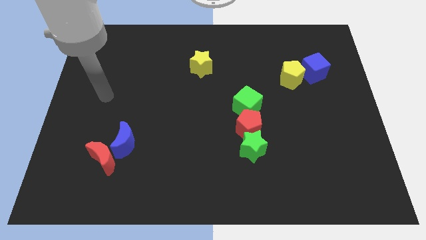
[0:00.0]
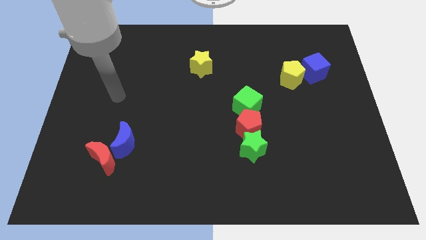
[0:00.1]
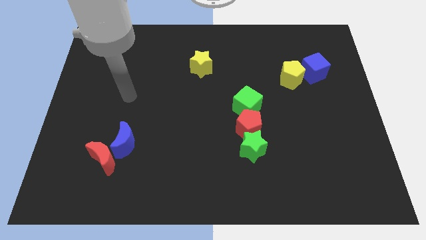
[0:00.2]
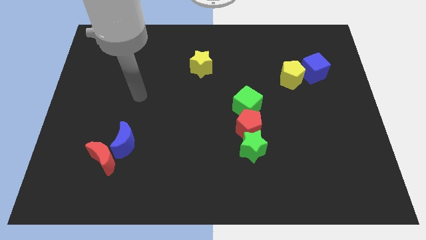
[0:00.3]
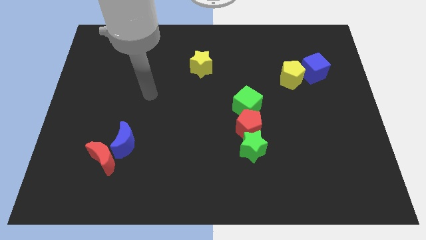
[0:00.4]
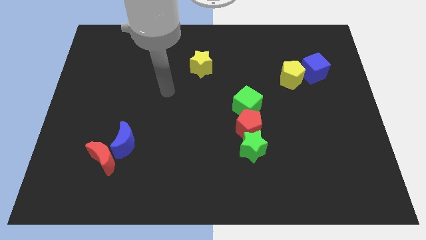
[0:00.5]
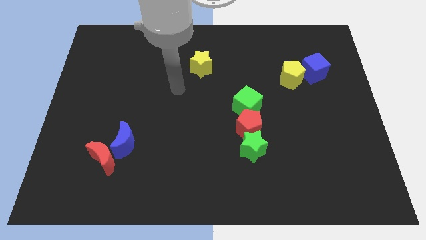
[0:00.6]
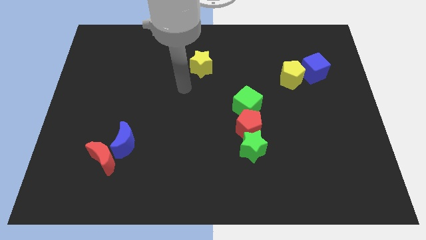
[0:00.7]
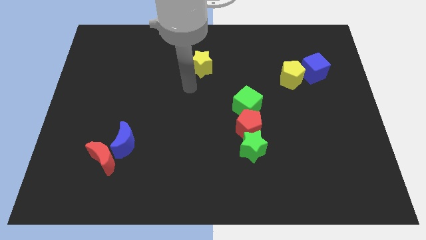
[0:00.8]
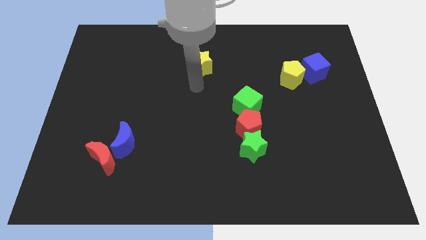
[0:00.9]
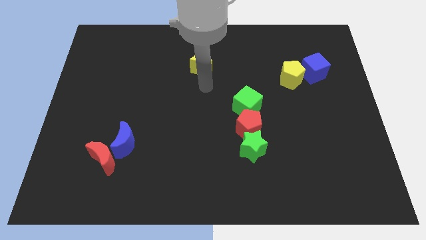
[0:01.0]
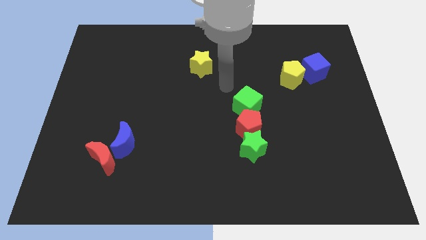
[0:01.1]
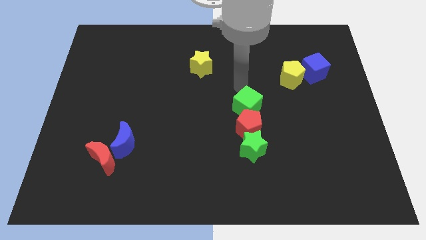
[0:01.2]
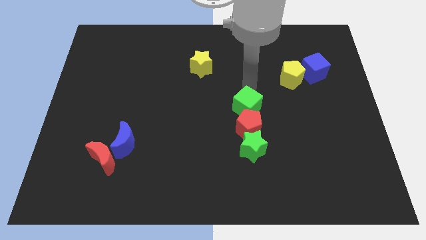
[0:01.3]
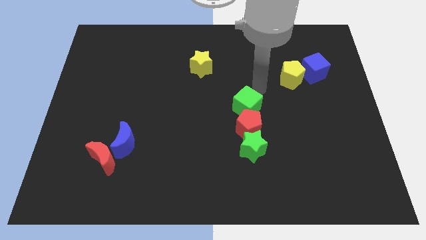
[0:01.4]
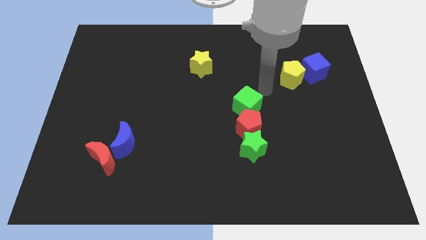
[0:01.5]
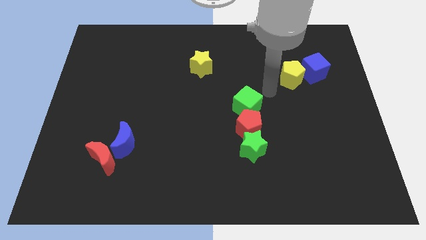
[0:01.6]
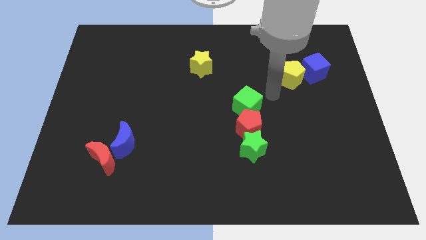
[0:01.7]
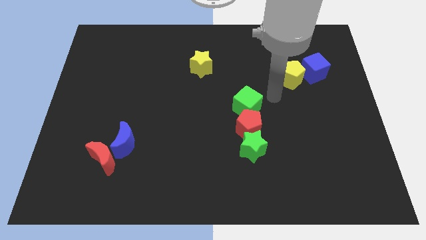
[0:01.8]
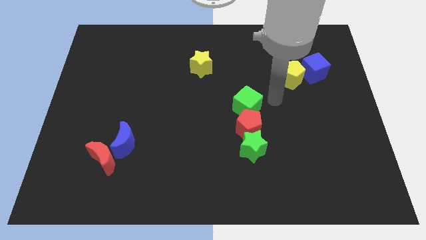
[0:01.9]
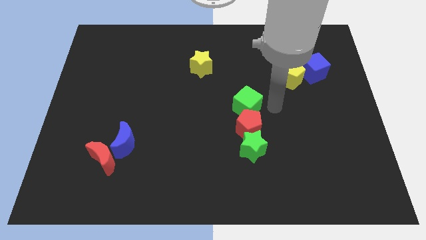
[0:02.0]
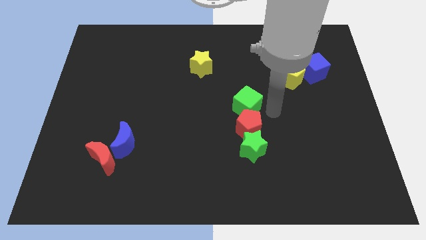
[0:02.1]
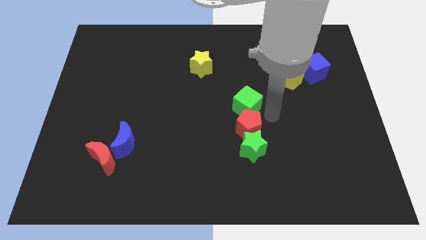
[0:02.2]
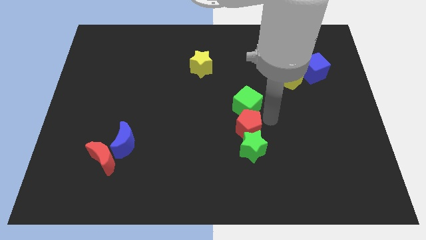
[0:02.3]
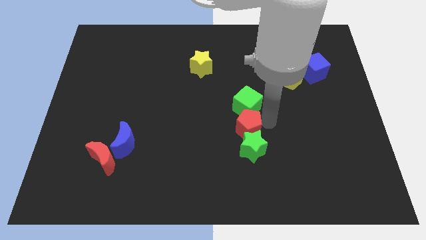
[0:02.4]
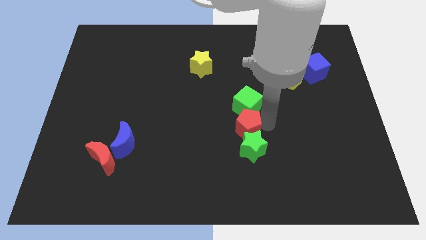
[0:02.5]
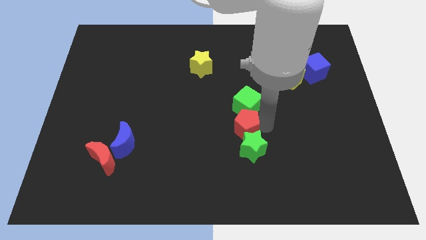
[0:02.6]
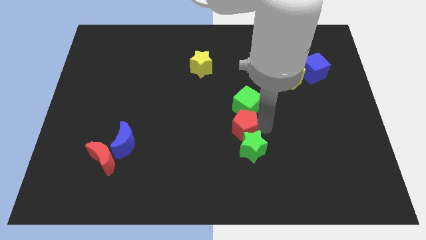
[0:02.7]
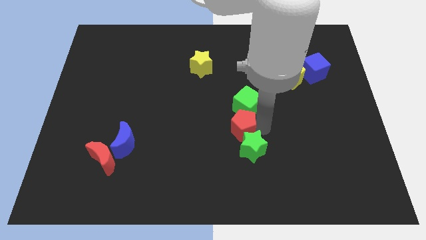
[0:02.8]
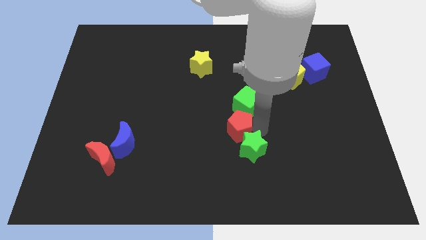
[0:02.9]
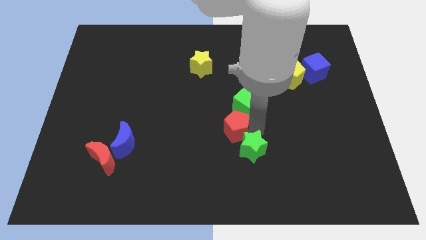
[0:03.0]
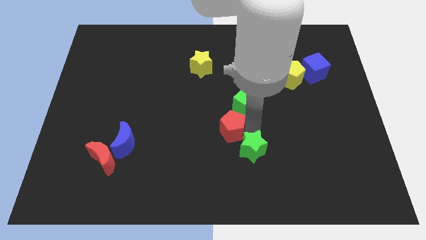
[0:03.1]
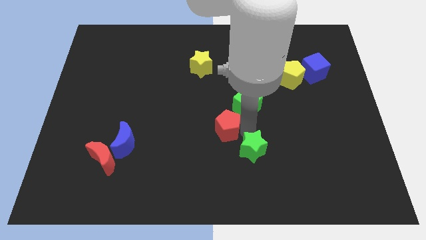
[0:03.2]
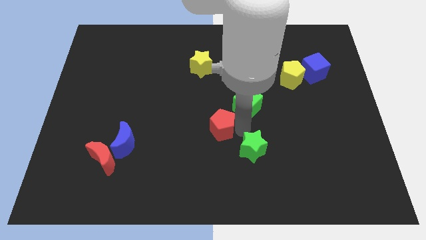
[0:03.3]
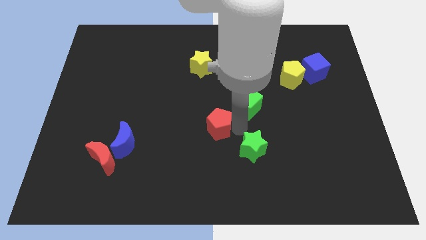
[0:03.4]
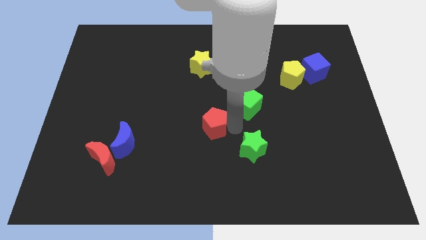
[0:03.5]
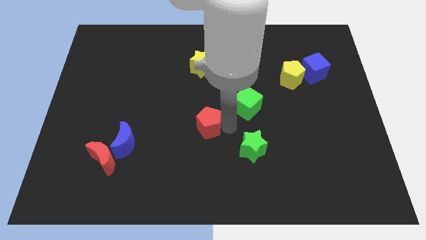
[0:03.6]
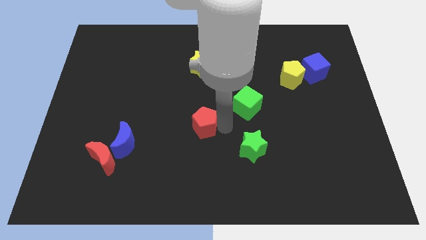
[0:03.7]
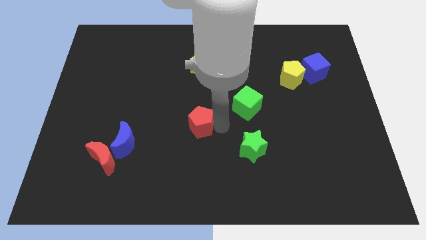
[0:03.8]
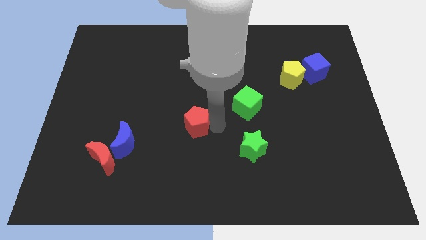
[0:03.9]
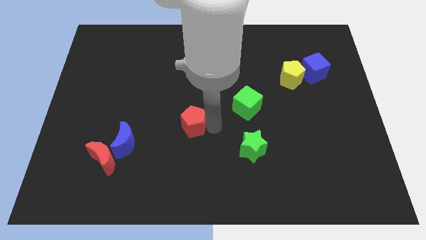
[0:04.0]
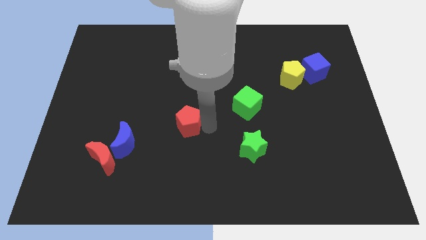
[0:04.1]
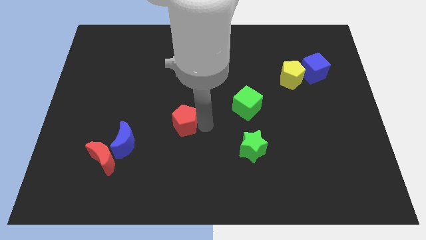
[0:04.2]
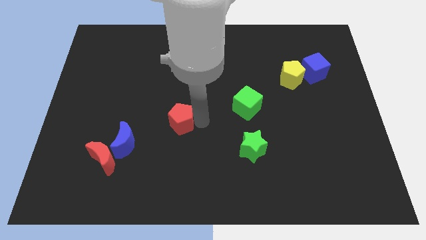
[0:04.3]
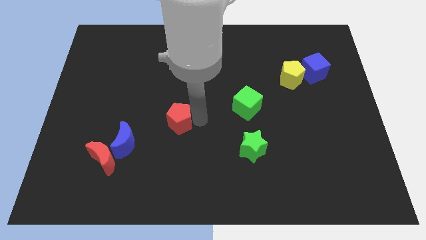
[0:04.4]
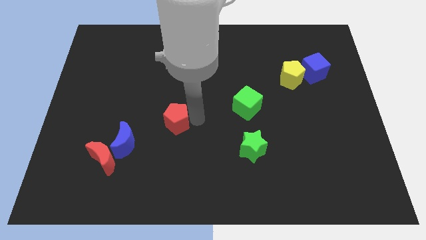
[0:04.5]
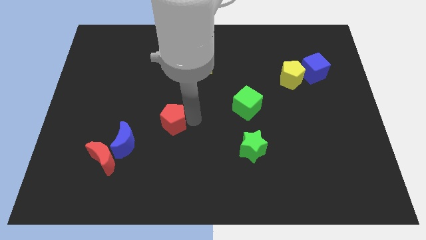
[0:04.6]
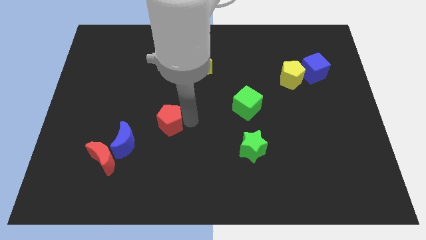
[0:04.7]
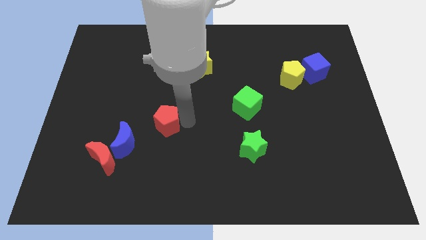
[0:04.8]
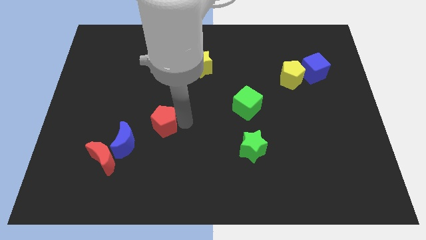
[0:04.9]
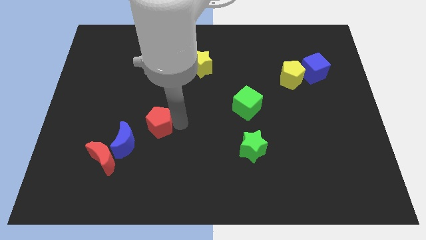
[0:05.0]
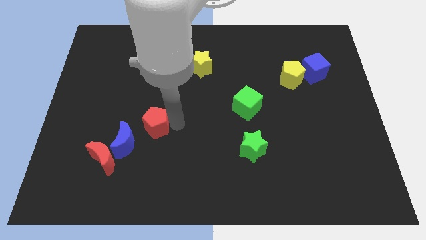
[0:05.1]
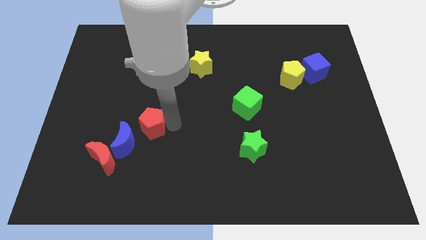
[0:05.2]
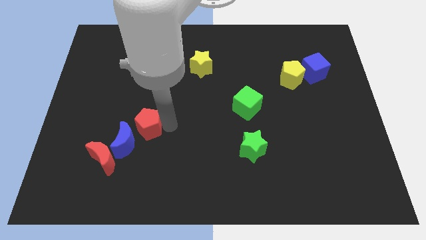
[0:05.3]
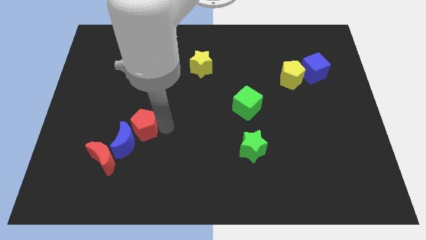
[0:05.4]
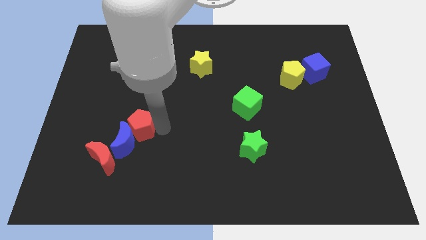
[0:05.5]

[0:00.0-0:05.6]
push the red pentagon next to the blue moon

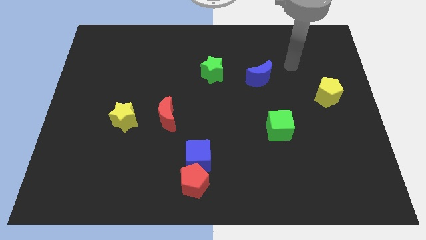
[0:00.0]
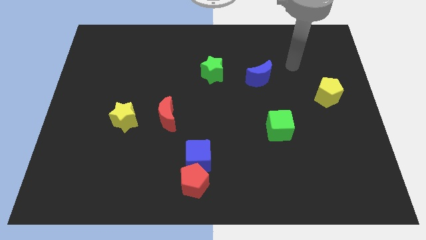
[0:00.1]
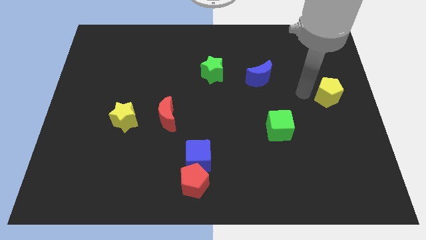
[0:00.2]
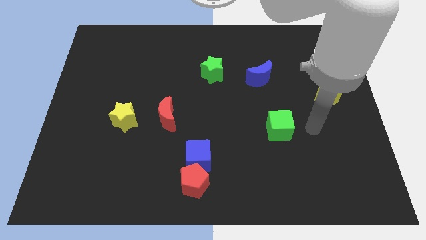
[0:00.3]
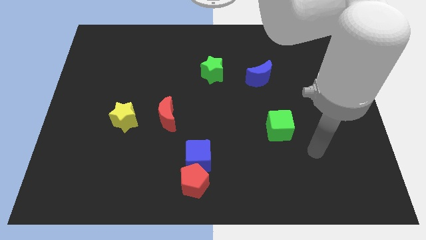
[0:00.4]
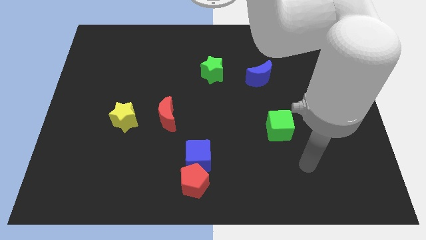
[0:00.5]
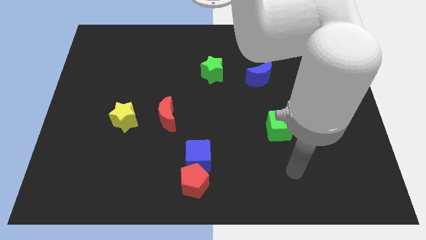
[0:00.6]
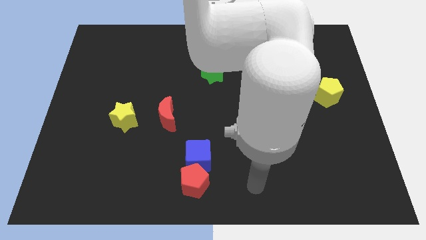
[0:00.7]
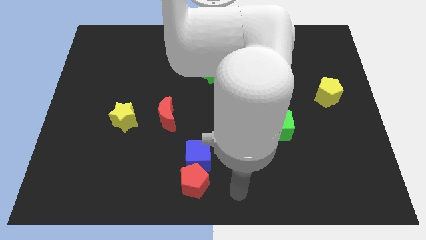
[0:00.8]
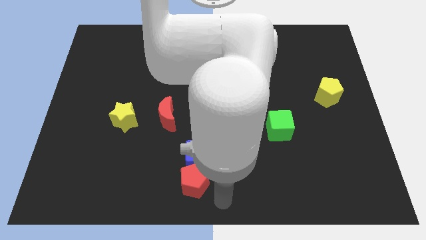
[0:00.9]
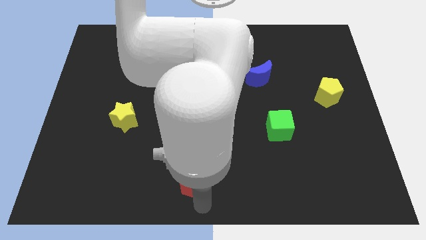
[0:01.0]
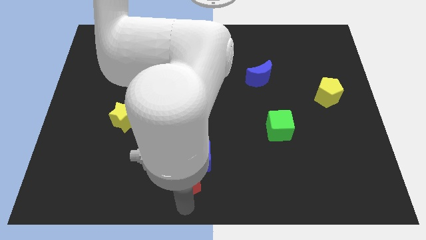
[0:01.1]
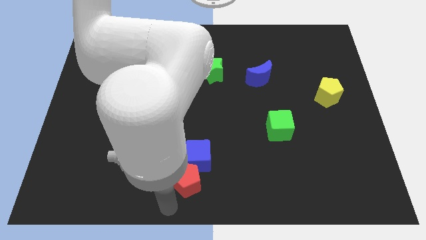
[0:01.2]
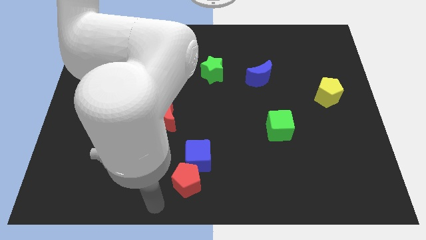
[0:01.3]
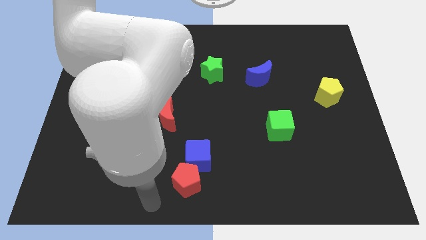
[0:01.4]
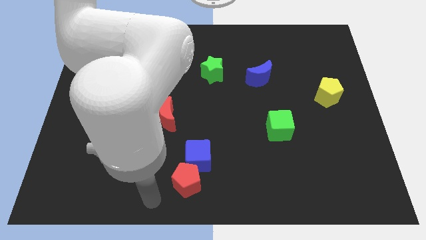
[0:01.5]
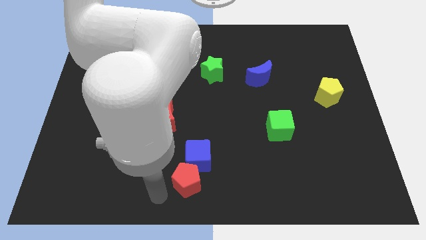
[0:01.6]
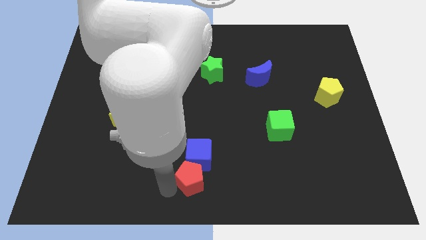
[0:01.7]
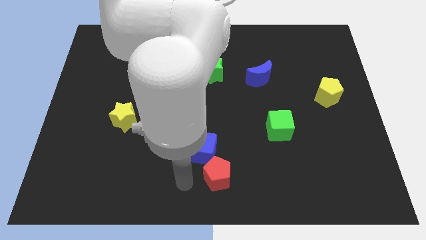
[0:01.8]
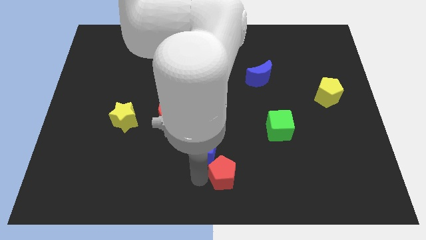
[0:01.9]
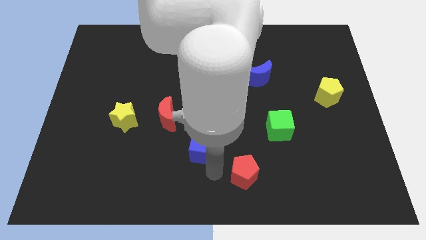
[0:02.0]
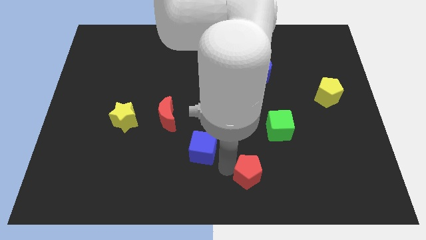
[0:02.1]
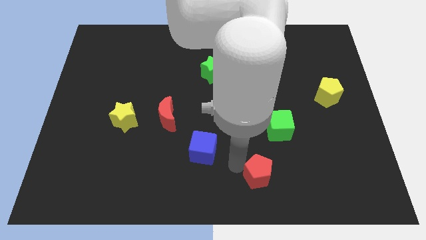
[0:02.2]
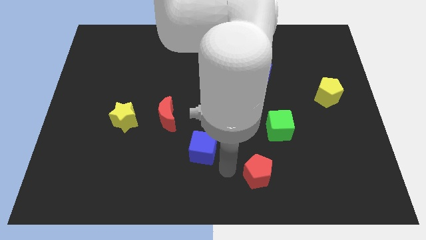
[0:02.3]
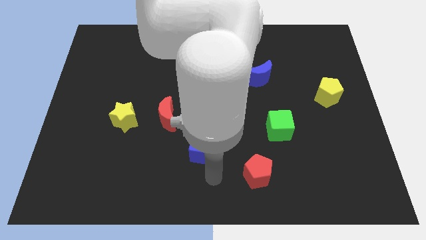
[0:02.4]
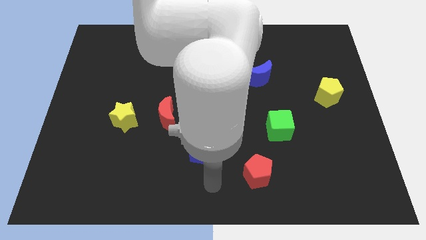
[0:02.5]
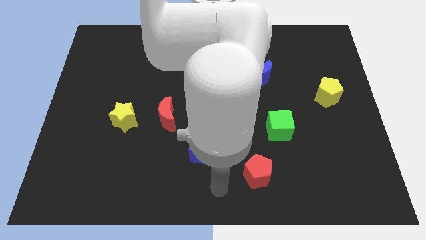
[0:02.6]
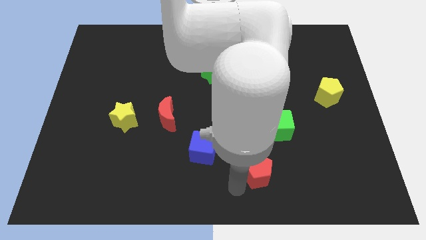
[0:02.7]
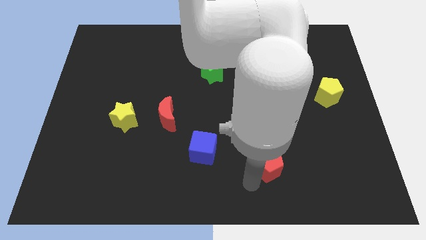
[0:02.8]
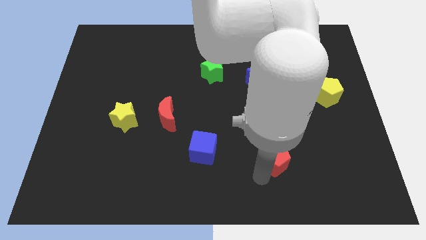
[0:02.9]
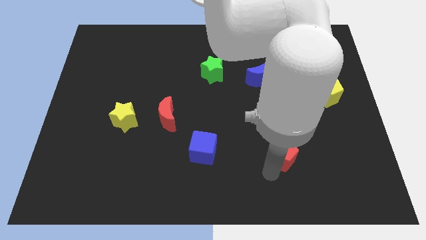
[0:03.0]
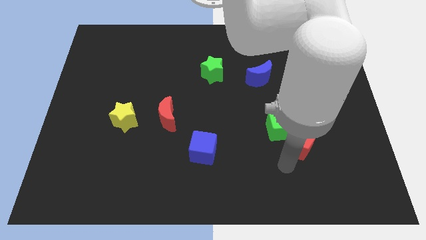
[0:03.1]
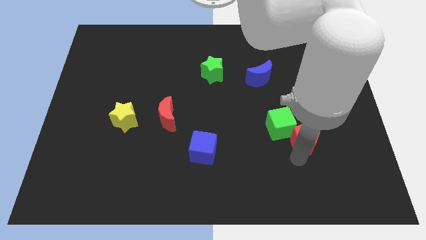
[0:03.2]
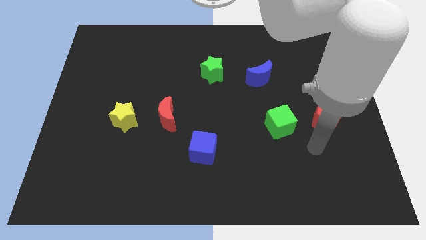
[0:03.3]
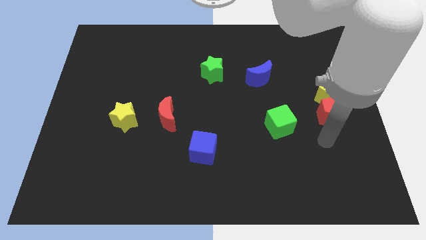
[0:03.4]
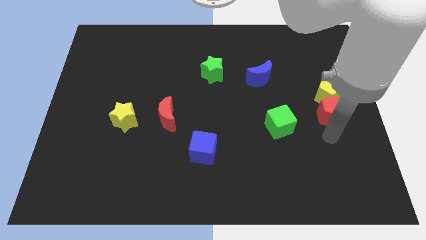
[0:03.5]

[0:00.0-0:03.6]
slide the red pentagon to the yellow pentagon
